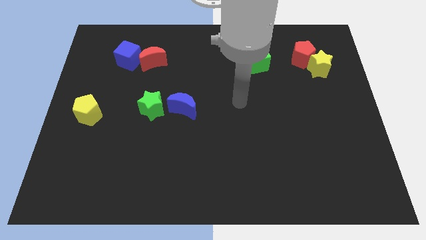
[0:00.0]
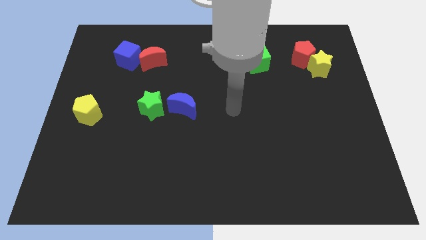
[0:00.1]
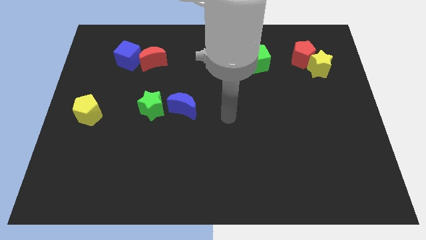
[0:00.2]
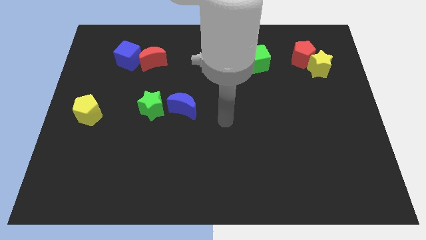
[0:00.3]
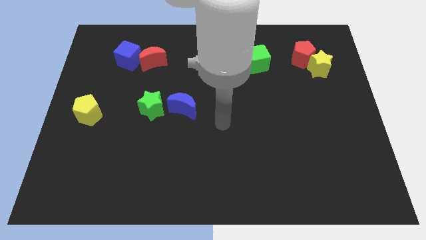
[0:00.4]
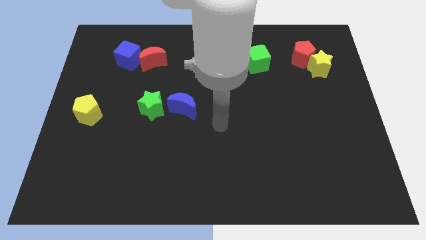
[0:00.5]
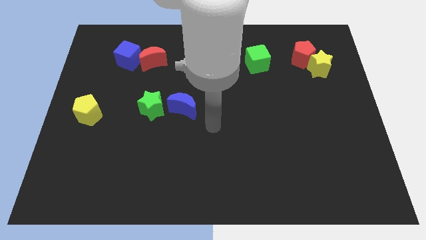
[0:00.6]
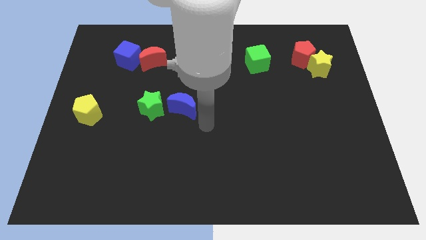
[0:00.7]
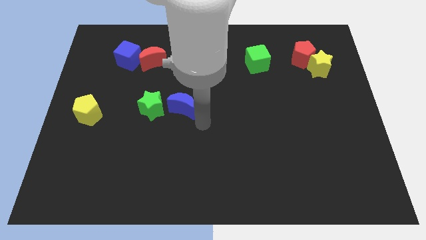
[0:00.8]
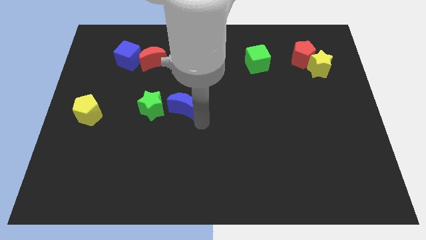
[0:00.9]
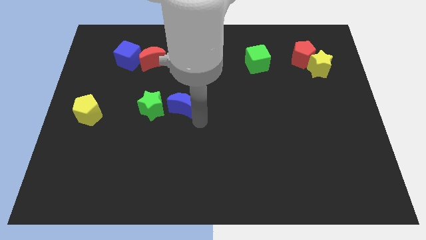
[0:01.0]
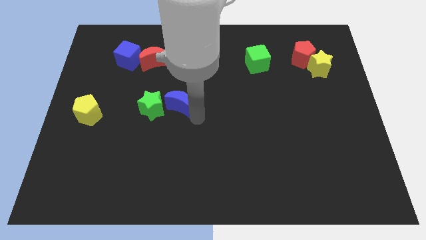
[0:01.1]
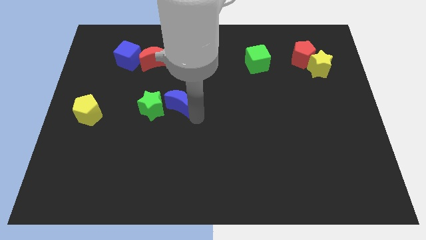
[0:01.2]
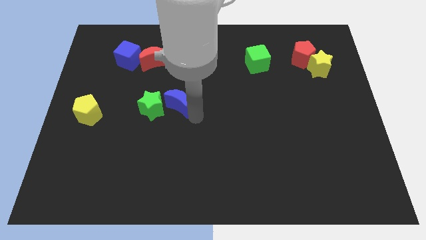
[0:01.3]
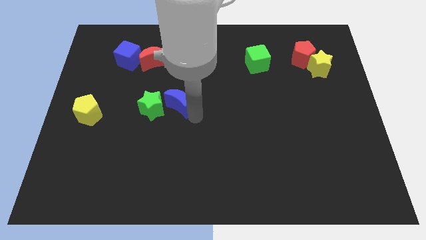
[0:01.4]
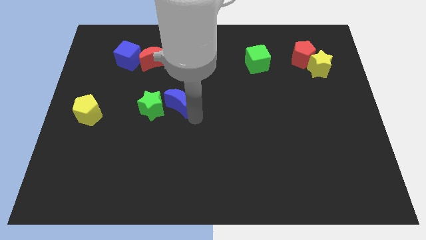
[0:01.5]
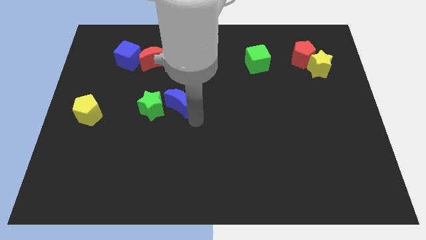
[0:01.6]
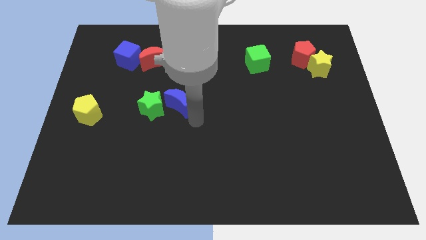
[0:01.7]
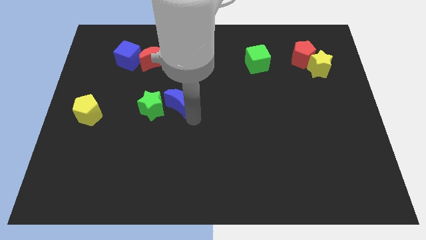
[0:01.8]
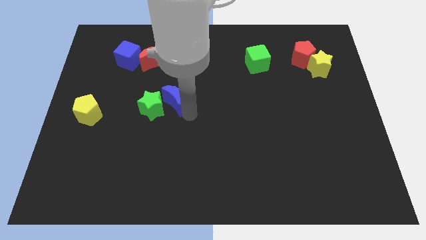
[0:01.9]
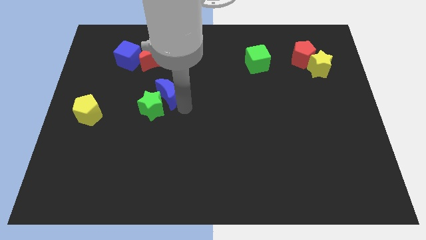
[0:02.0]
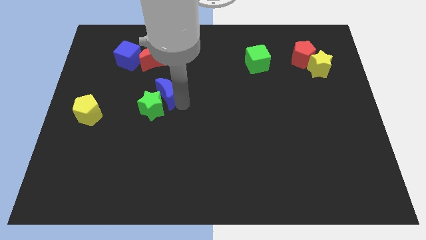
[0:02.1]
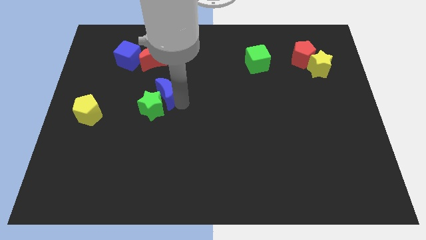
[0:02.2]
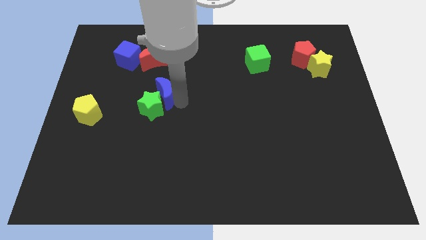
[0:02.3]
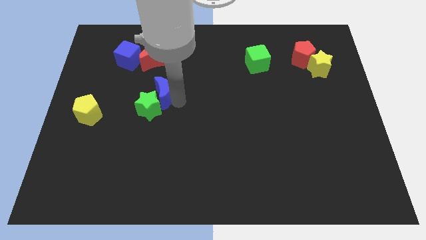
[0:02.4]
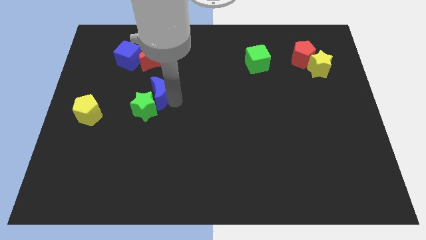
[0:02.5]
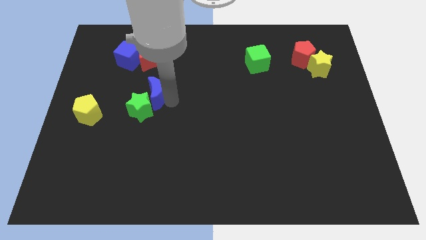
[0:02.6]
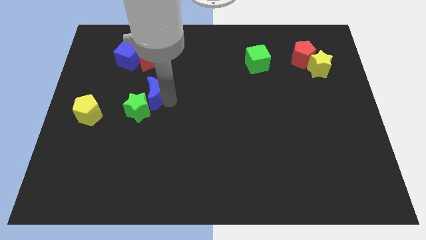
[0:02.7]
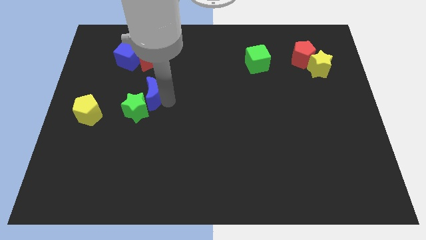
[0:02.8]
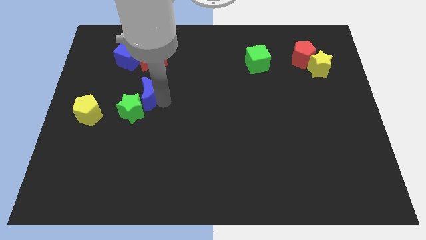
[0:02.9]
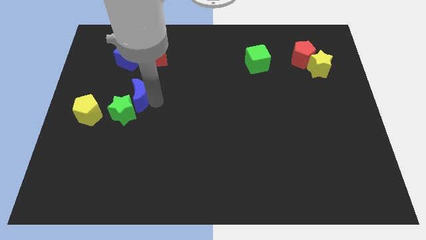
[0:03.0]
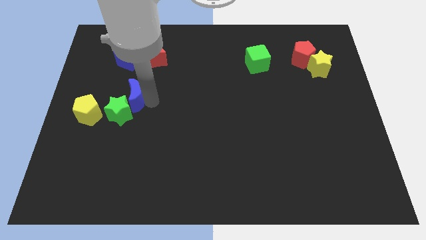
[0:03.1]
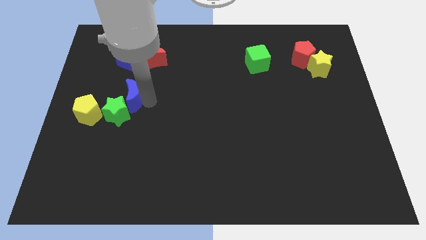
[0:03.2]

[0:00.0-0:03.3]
push blue moon in to green star

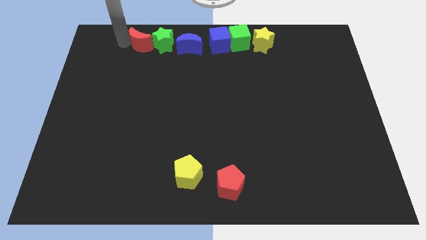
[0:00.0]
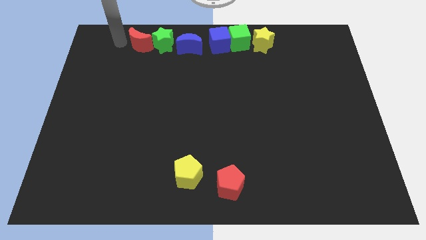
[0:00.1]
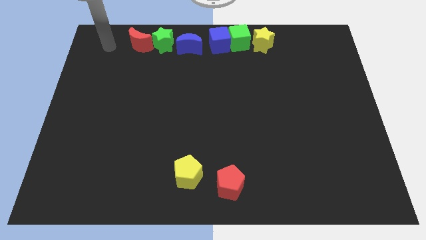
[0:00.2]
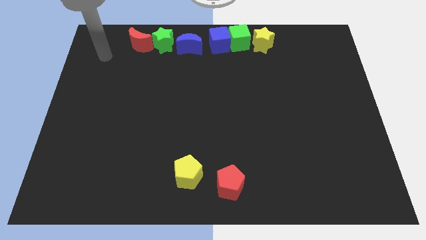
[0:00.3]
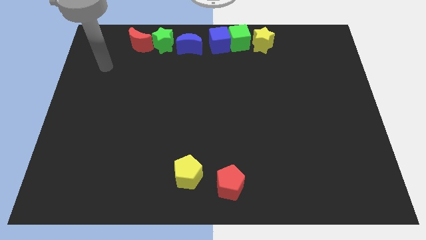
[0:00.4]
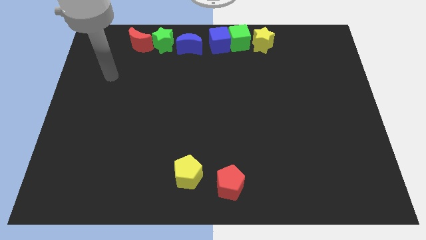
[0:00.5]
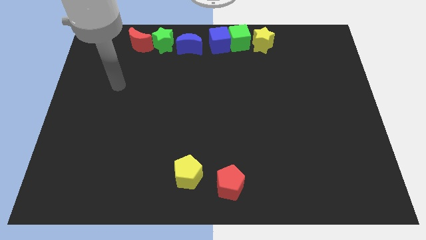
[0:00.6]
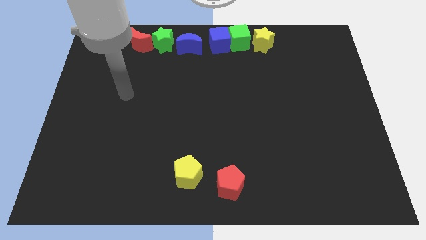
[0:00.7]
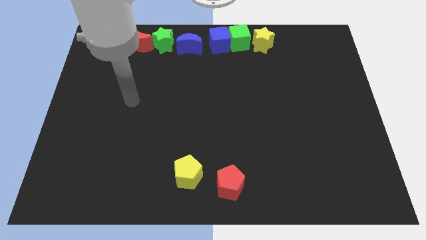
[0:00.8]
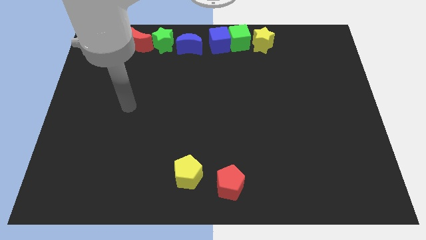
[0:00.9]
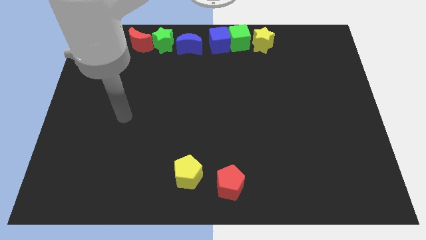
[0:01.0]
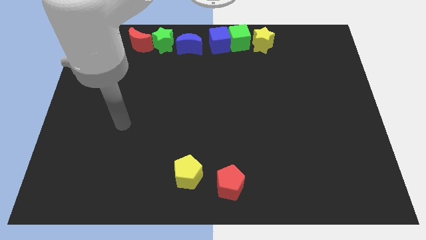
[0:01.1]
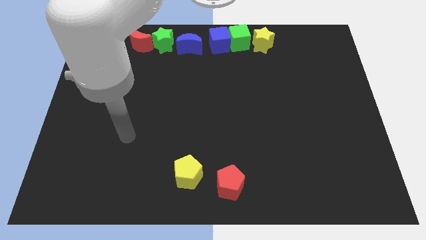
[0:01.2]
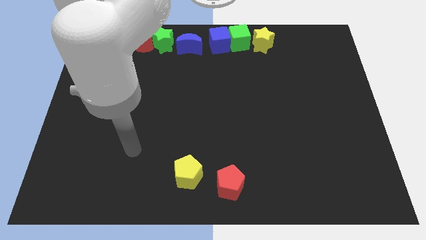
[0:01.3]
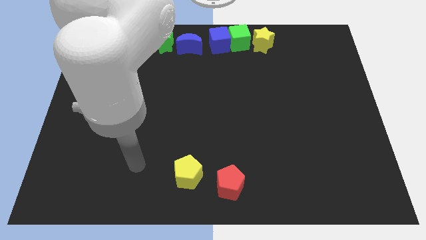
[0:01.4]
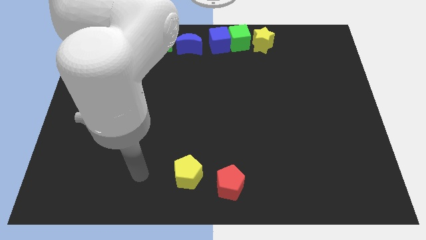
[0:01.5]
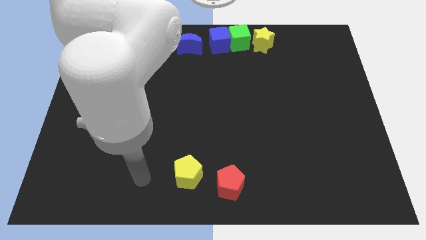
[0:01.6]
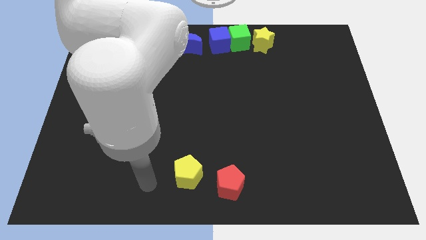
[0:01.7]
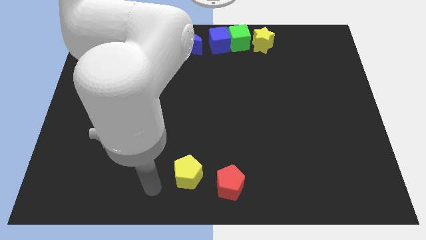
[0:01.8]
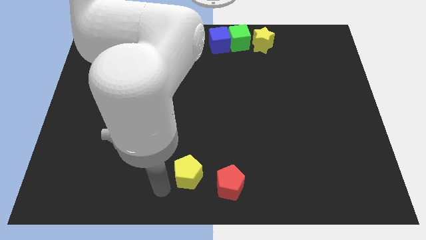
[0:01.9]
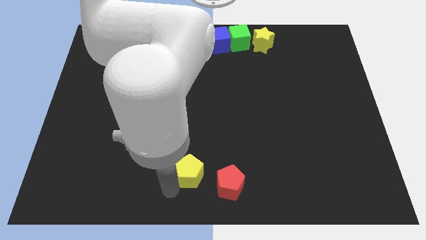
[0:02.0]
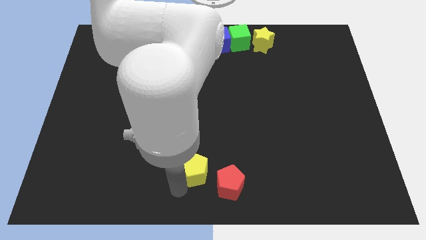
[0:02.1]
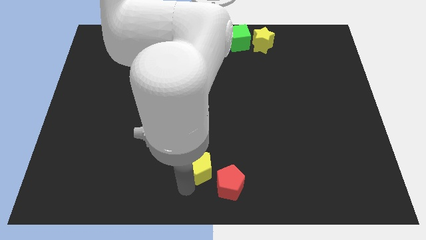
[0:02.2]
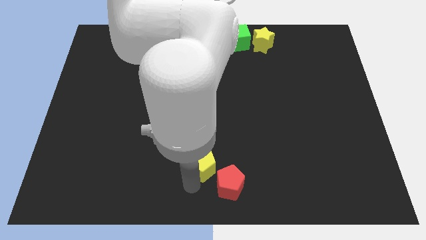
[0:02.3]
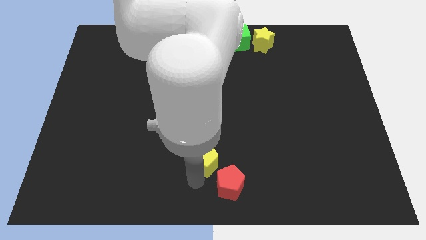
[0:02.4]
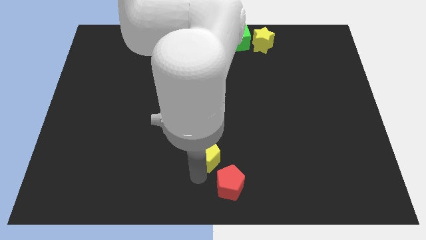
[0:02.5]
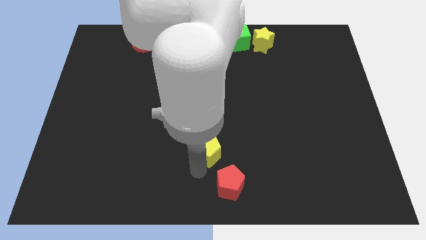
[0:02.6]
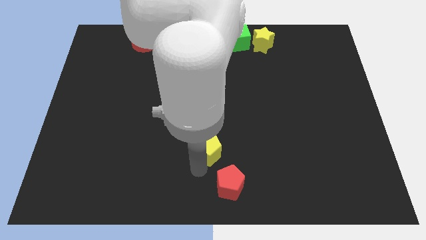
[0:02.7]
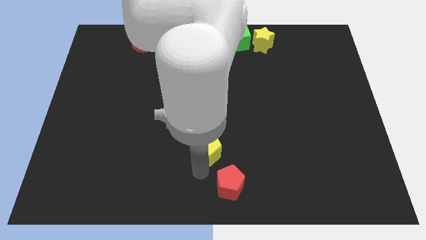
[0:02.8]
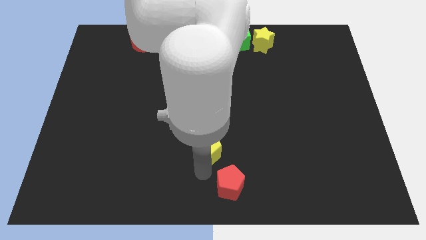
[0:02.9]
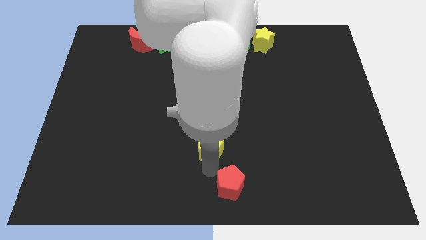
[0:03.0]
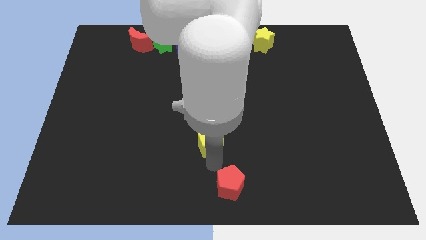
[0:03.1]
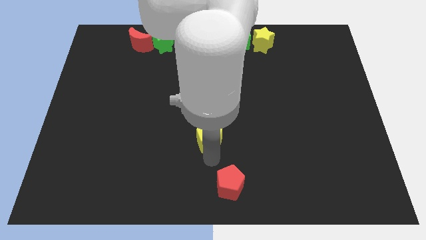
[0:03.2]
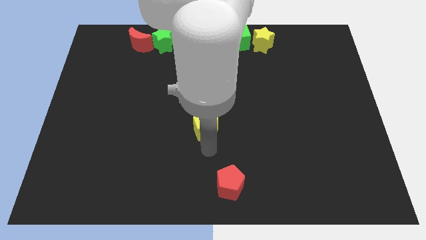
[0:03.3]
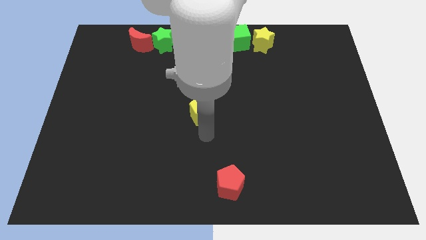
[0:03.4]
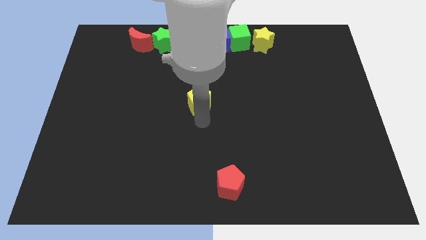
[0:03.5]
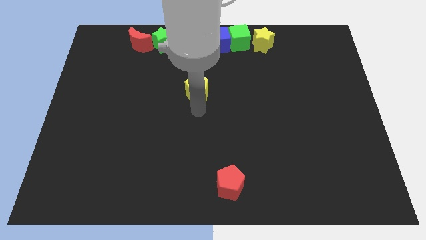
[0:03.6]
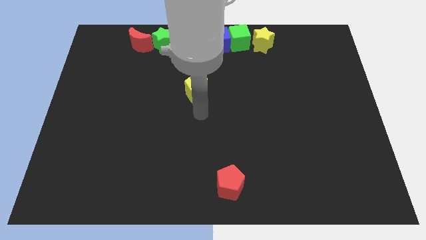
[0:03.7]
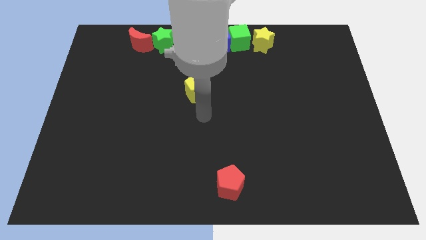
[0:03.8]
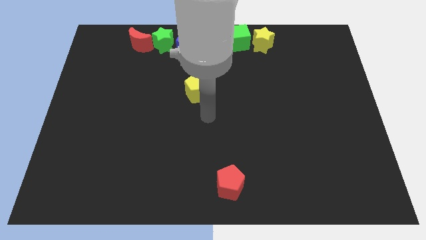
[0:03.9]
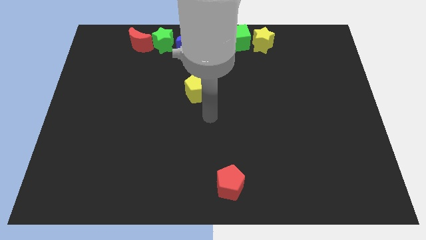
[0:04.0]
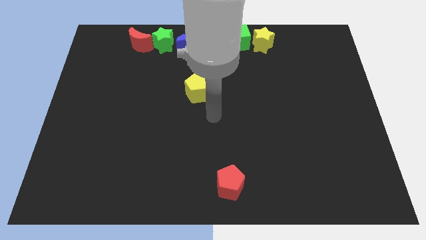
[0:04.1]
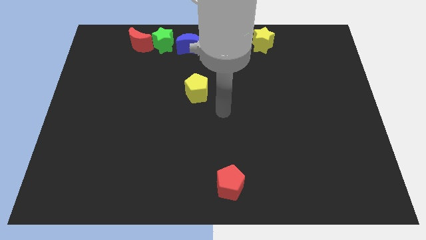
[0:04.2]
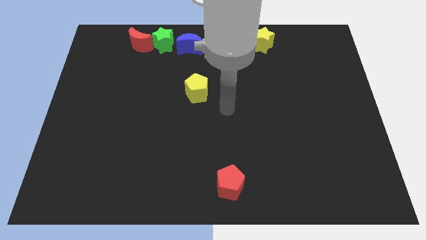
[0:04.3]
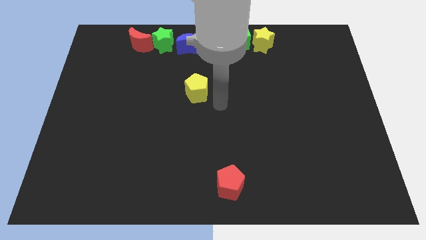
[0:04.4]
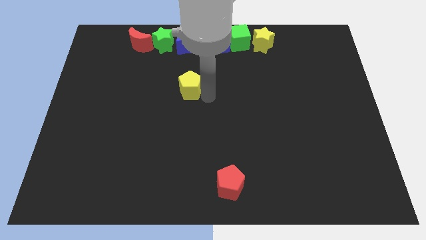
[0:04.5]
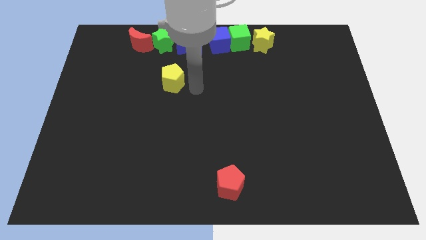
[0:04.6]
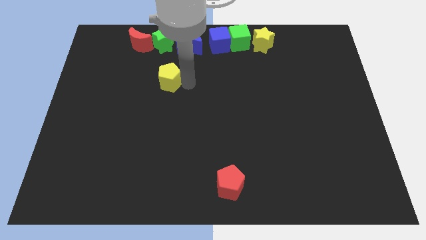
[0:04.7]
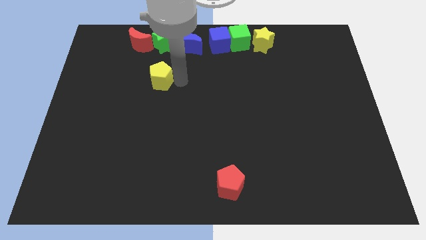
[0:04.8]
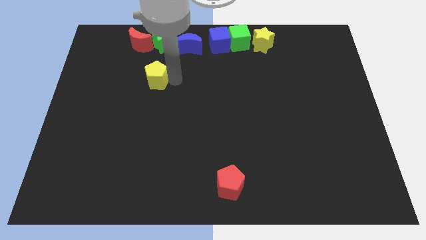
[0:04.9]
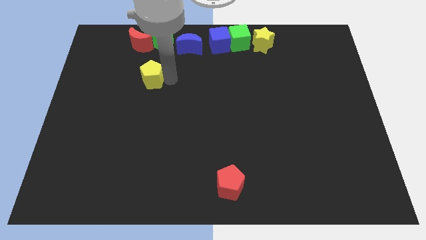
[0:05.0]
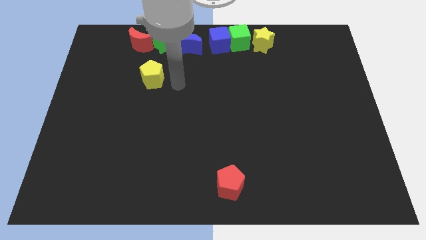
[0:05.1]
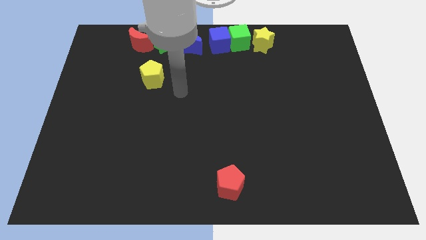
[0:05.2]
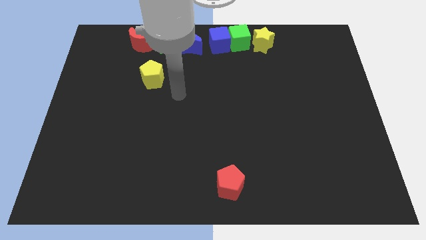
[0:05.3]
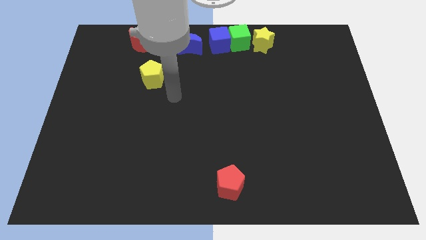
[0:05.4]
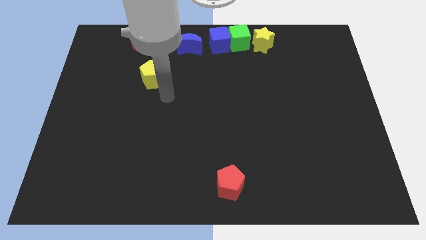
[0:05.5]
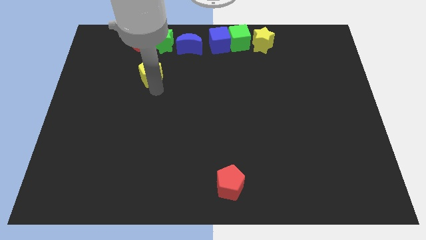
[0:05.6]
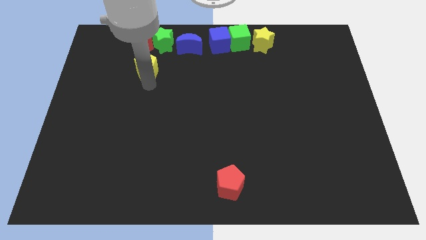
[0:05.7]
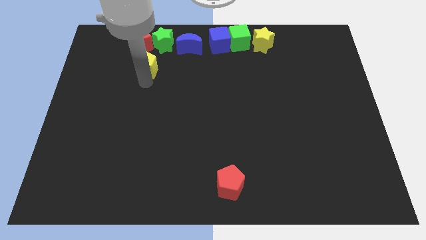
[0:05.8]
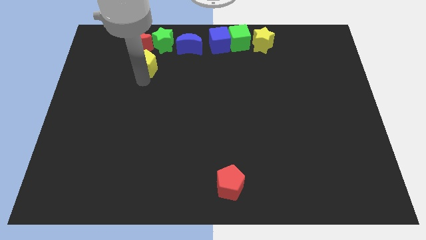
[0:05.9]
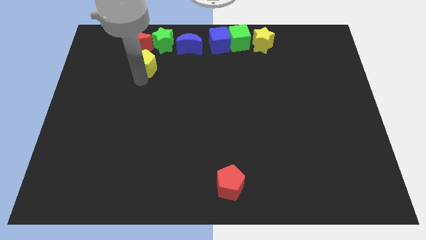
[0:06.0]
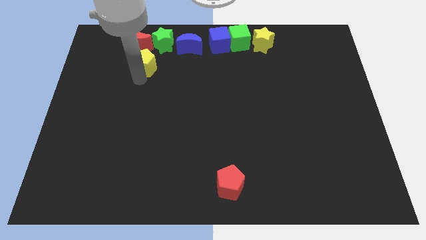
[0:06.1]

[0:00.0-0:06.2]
bring the yellow pentagon towards the bottom side of the red crescent
